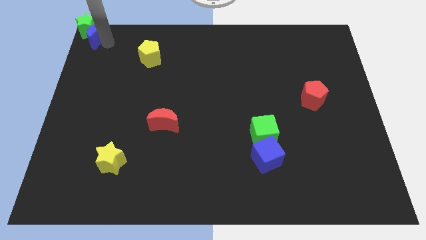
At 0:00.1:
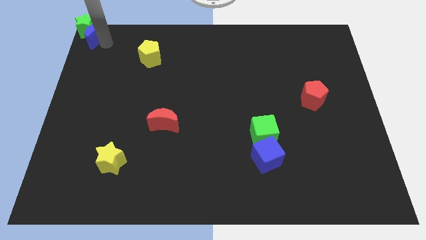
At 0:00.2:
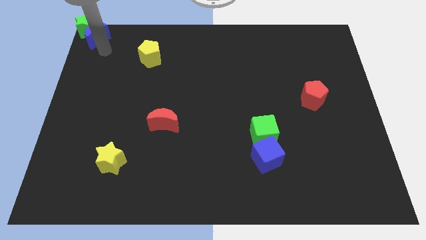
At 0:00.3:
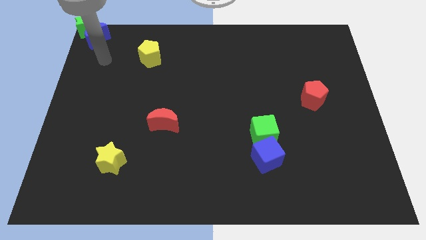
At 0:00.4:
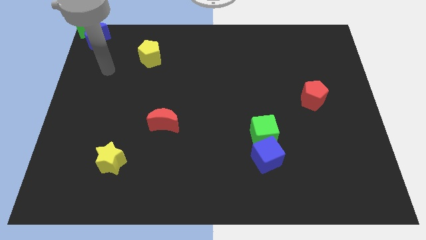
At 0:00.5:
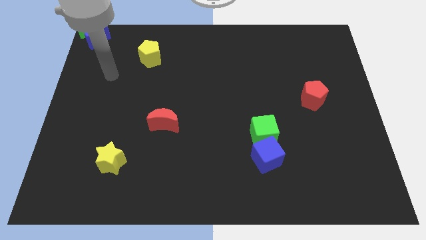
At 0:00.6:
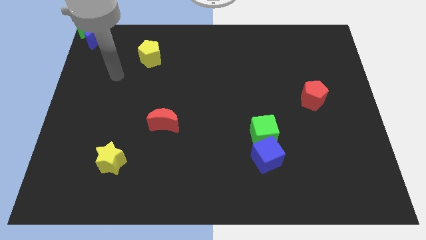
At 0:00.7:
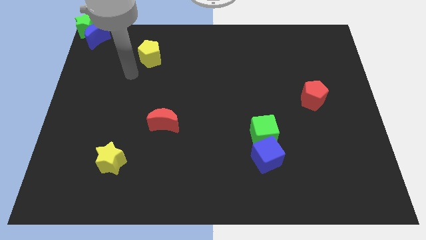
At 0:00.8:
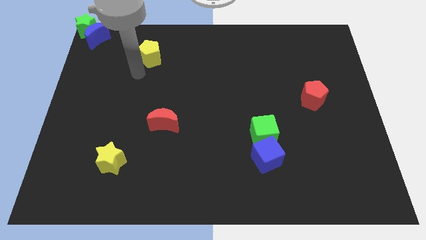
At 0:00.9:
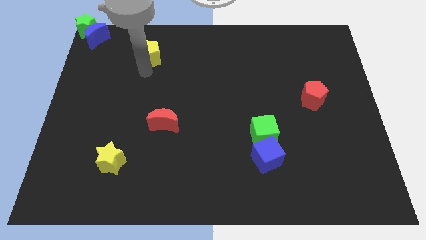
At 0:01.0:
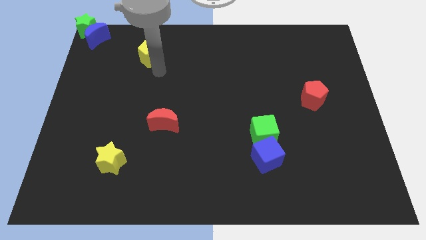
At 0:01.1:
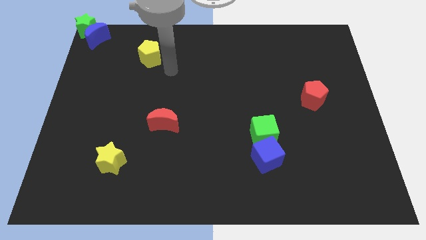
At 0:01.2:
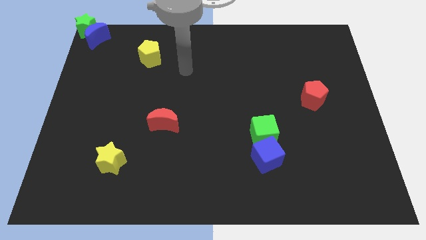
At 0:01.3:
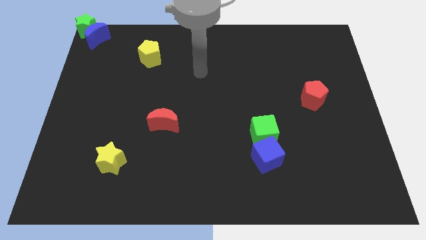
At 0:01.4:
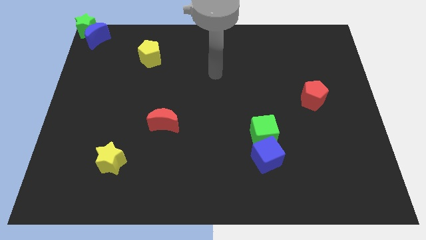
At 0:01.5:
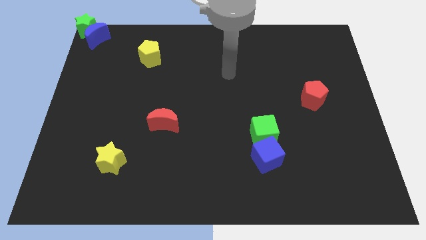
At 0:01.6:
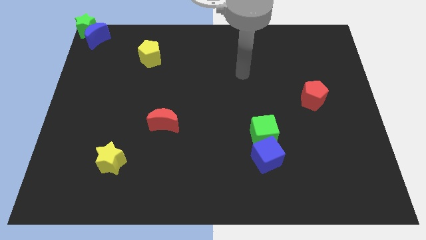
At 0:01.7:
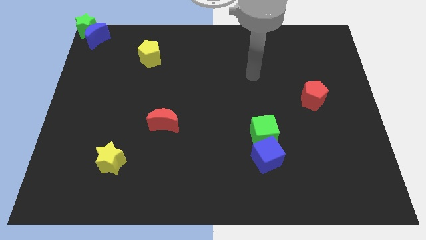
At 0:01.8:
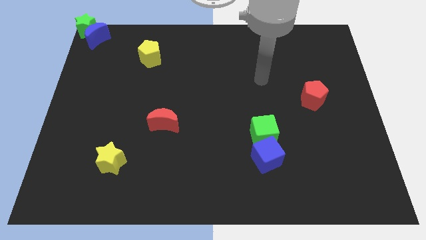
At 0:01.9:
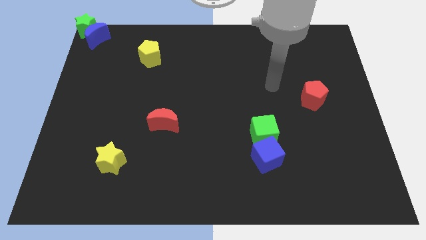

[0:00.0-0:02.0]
move your arm away from the blue crescent

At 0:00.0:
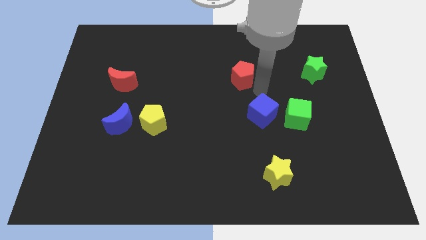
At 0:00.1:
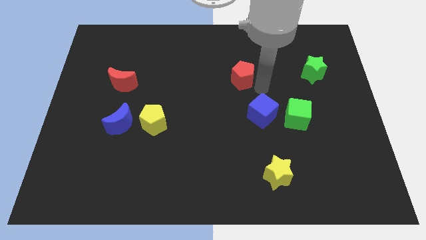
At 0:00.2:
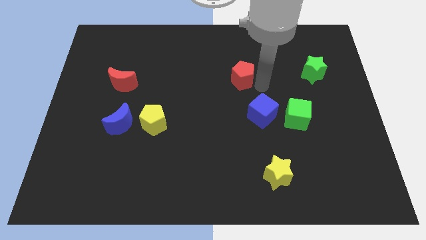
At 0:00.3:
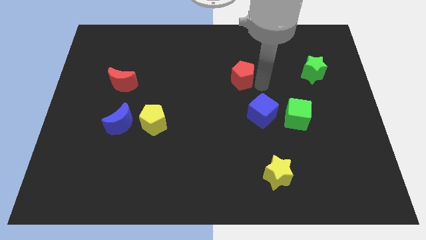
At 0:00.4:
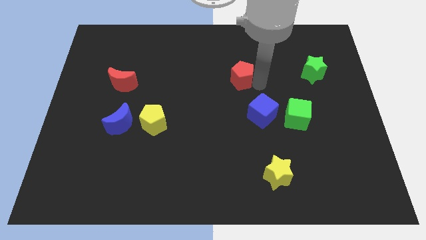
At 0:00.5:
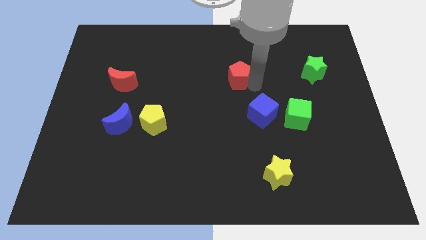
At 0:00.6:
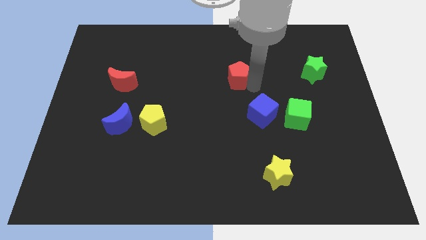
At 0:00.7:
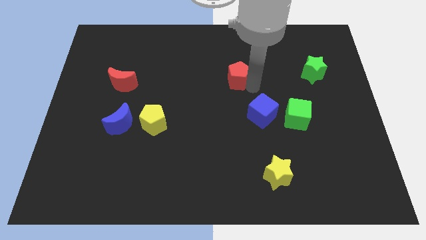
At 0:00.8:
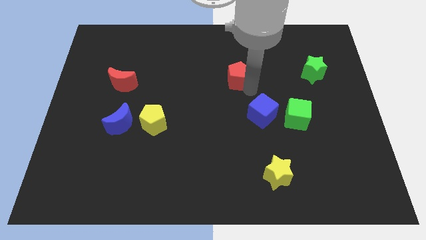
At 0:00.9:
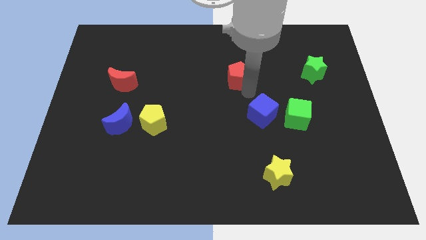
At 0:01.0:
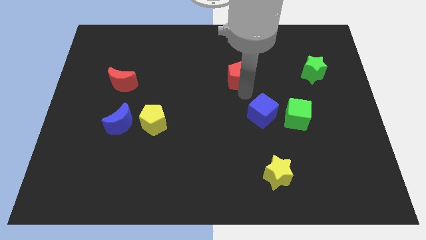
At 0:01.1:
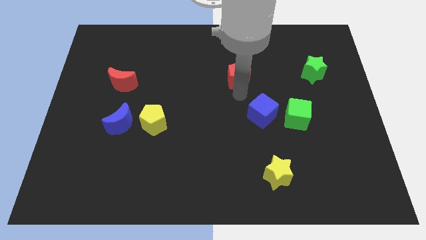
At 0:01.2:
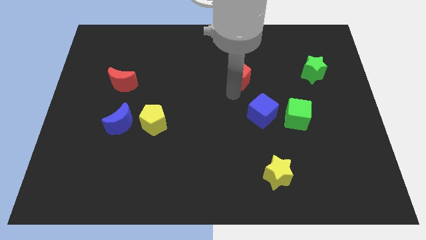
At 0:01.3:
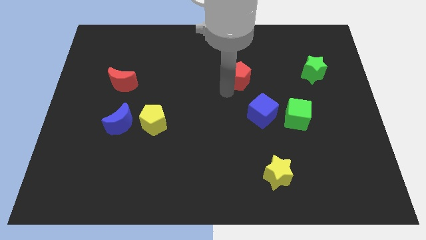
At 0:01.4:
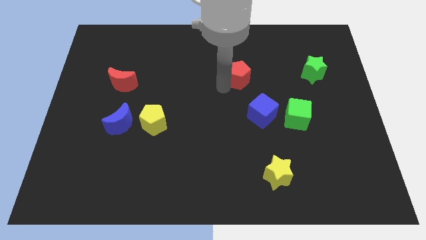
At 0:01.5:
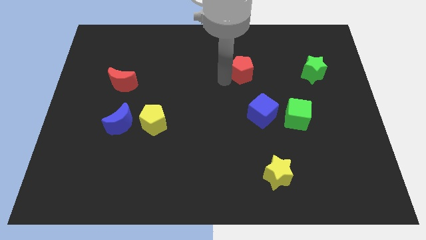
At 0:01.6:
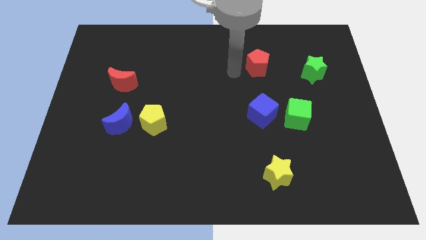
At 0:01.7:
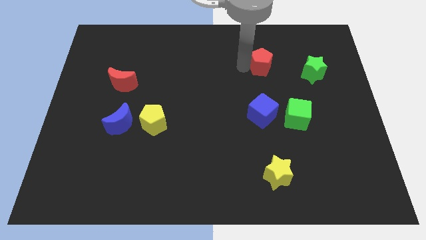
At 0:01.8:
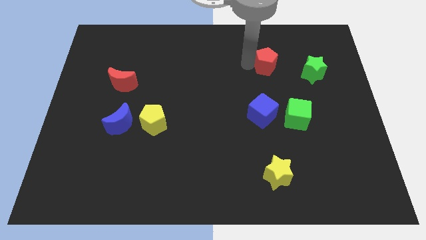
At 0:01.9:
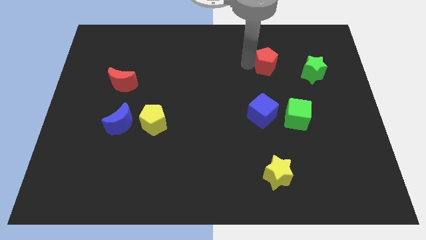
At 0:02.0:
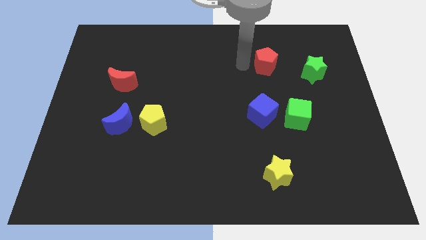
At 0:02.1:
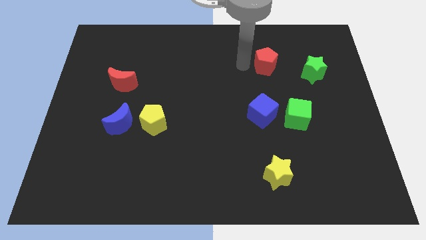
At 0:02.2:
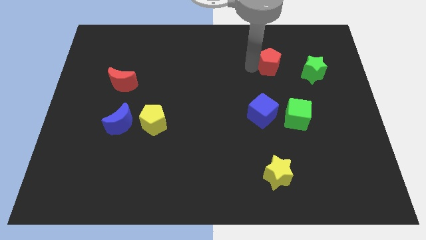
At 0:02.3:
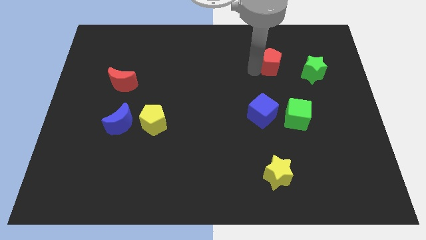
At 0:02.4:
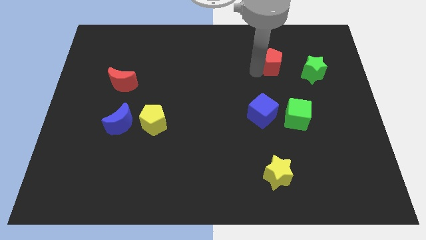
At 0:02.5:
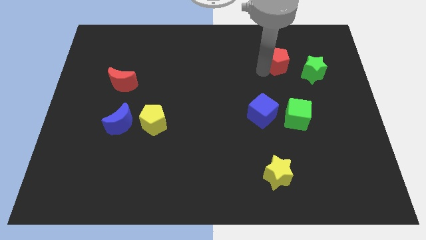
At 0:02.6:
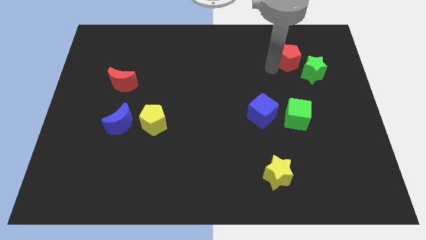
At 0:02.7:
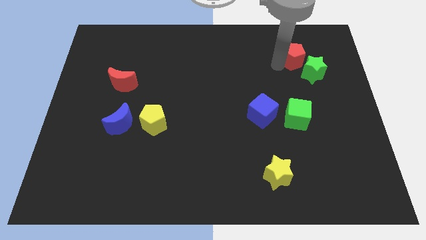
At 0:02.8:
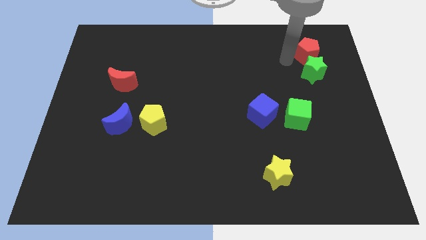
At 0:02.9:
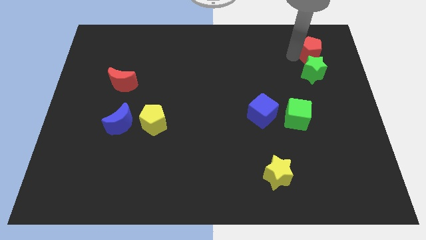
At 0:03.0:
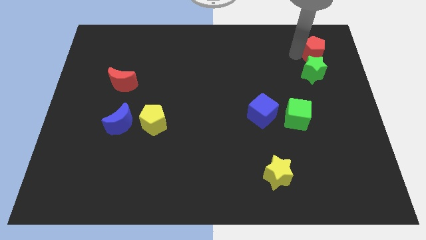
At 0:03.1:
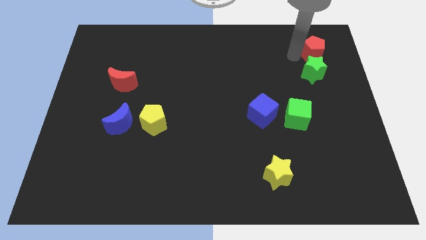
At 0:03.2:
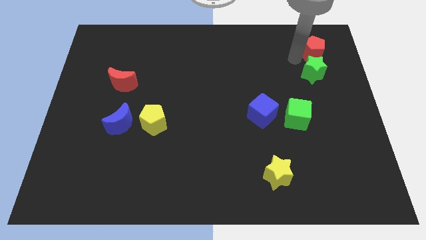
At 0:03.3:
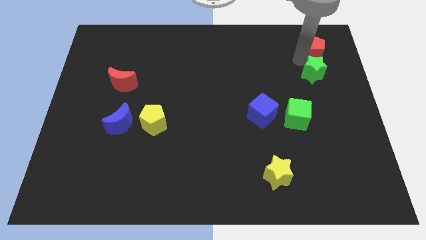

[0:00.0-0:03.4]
place red pentagon above green star

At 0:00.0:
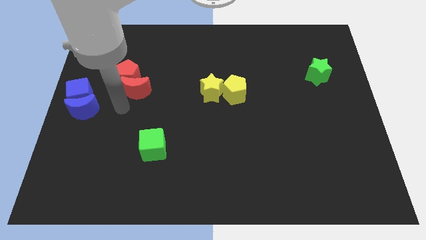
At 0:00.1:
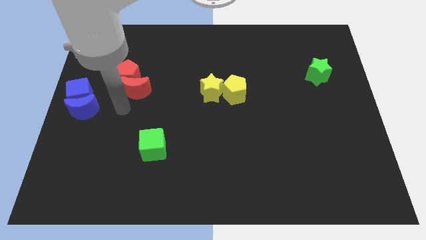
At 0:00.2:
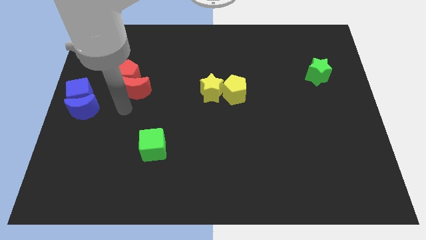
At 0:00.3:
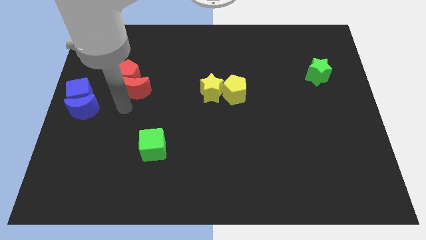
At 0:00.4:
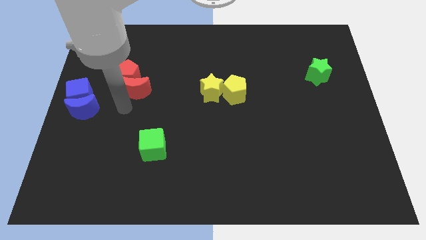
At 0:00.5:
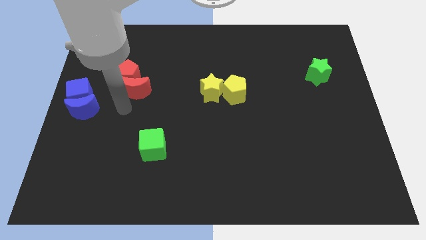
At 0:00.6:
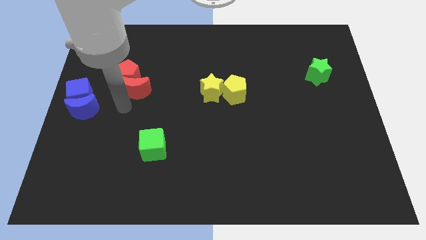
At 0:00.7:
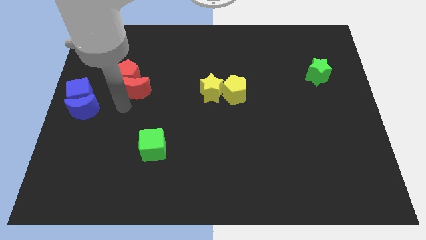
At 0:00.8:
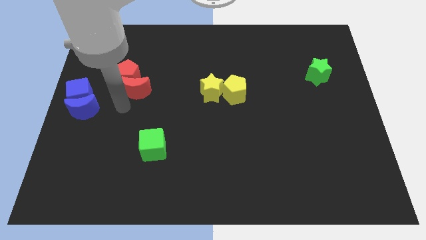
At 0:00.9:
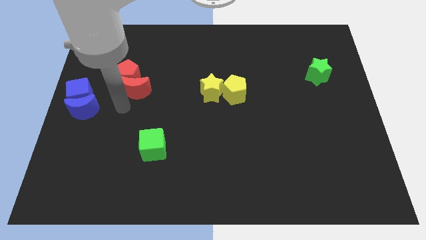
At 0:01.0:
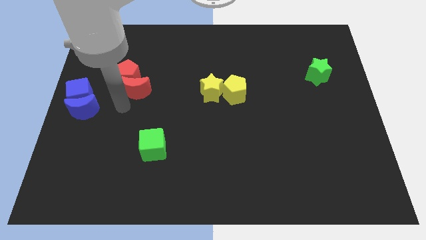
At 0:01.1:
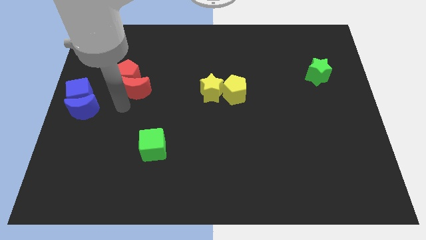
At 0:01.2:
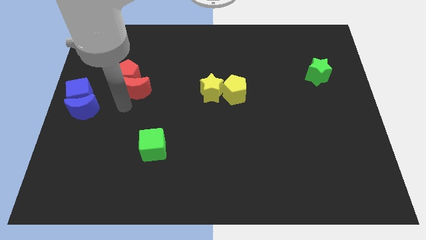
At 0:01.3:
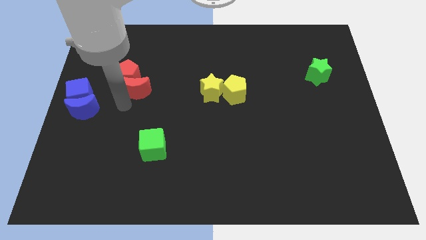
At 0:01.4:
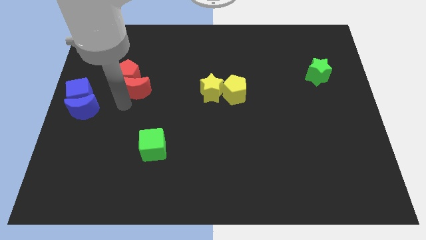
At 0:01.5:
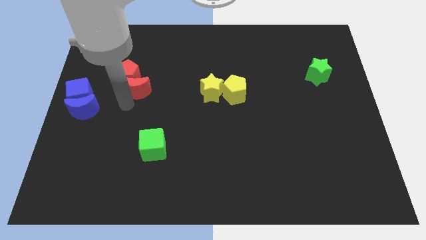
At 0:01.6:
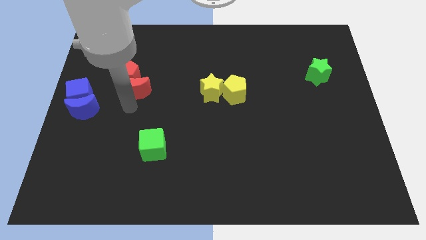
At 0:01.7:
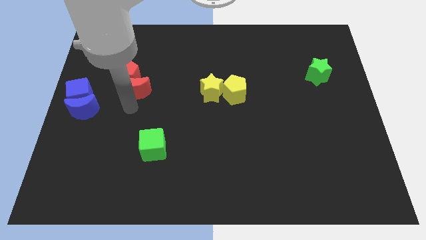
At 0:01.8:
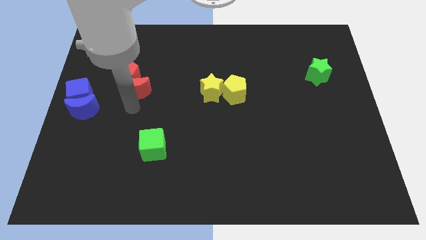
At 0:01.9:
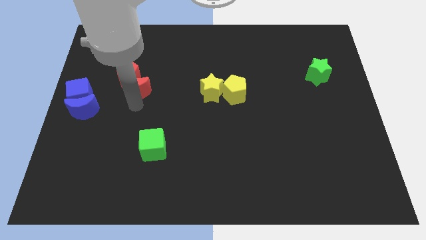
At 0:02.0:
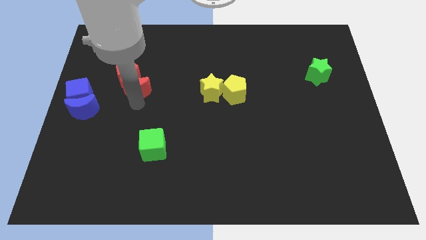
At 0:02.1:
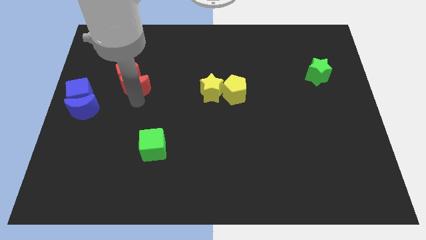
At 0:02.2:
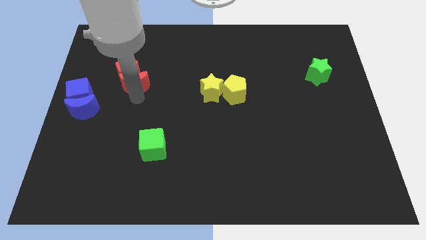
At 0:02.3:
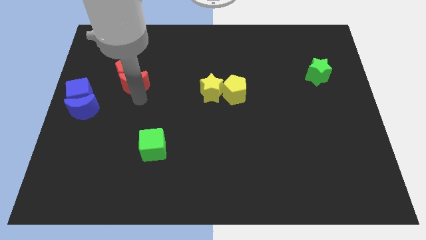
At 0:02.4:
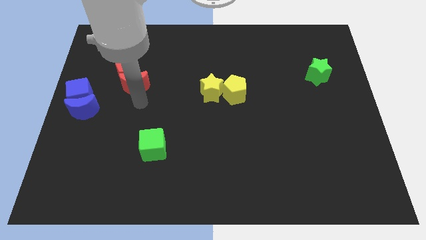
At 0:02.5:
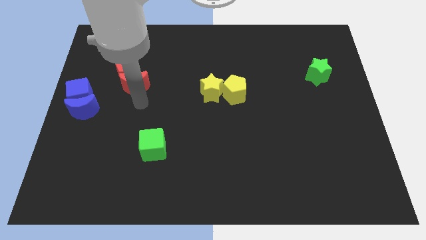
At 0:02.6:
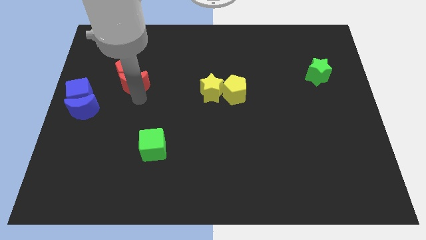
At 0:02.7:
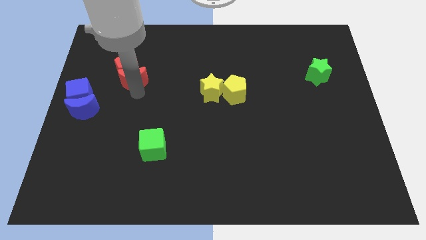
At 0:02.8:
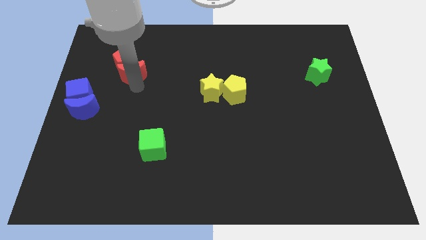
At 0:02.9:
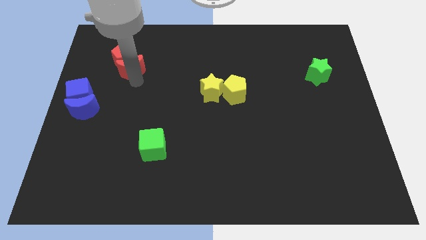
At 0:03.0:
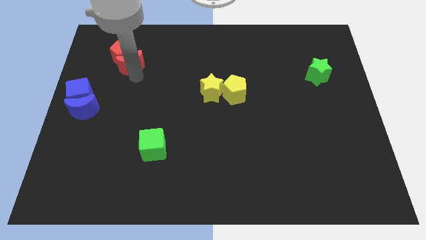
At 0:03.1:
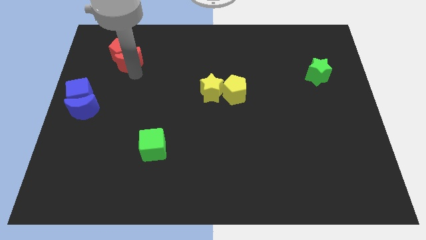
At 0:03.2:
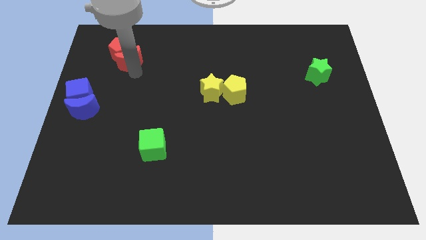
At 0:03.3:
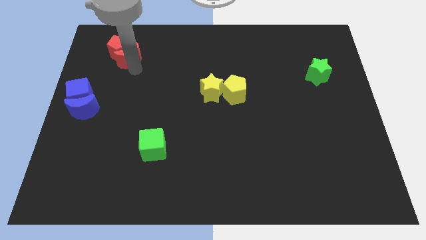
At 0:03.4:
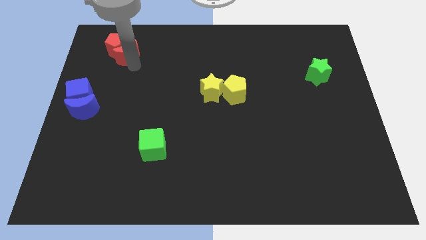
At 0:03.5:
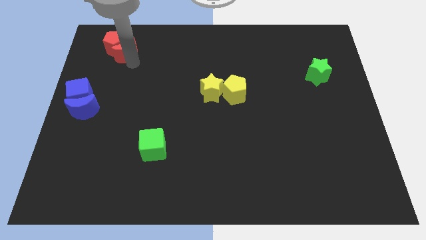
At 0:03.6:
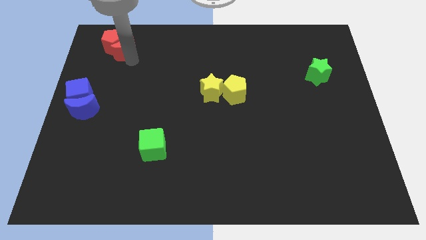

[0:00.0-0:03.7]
push the red crescent into red pentagon towards the top left of the board
